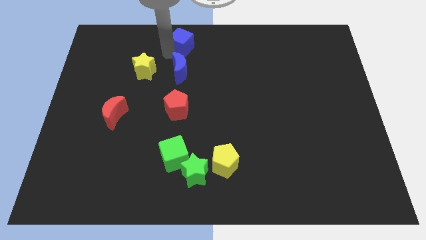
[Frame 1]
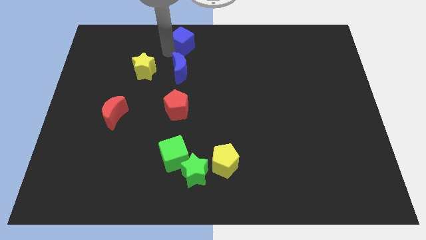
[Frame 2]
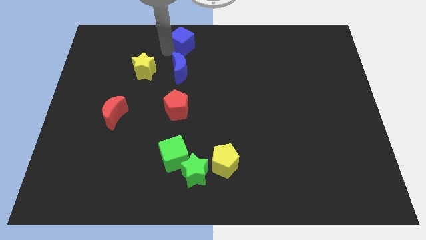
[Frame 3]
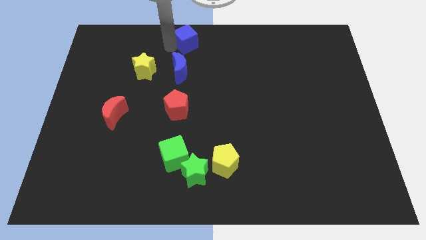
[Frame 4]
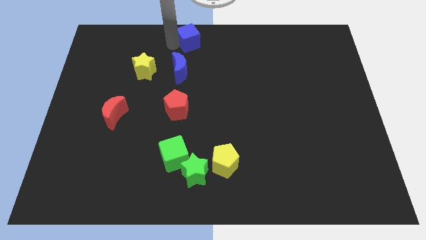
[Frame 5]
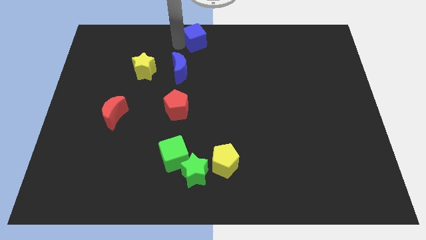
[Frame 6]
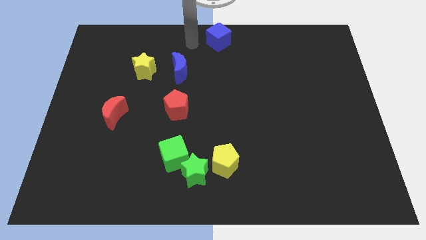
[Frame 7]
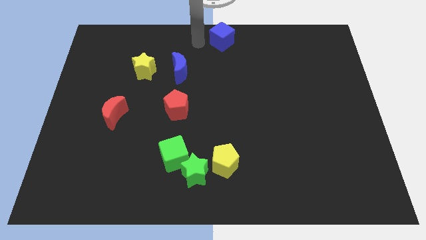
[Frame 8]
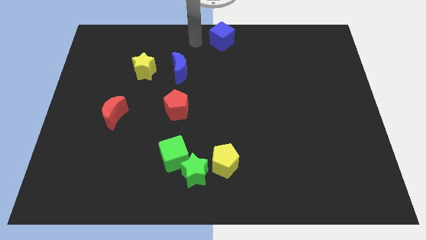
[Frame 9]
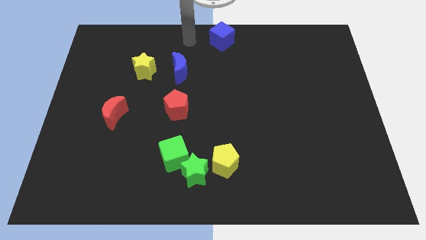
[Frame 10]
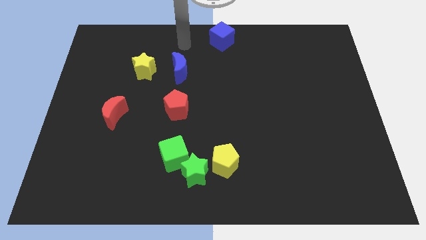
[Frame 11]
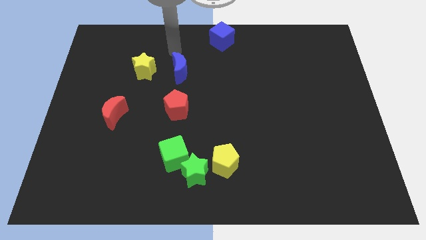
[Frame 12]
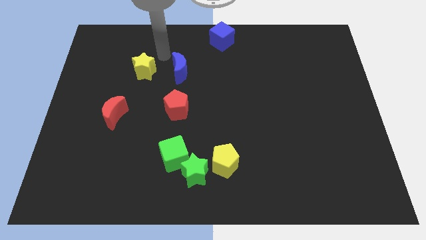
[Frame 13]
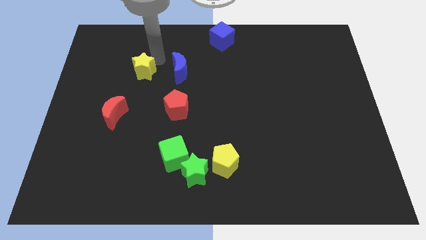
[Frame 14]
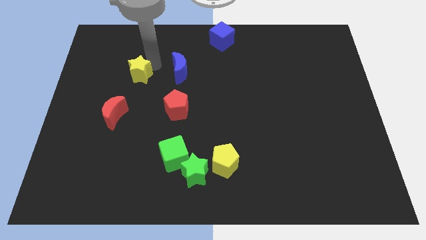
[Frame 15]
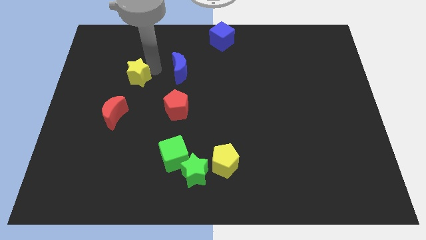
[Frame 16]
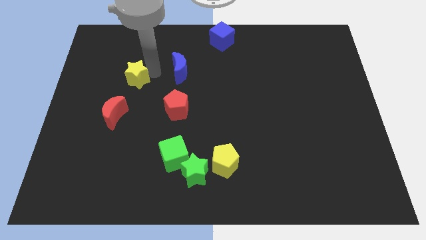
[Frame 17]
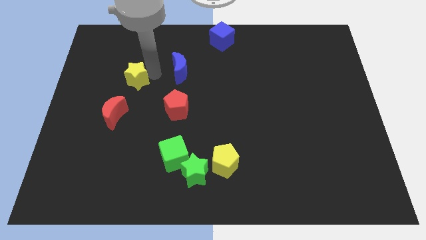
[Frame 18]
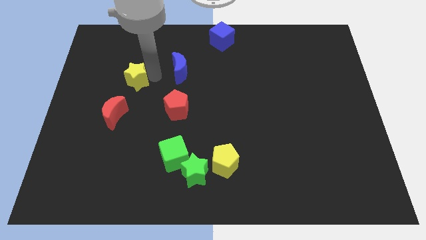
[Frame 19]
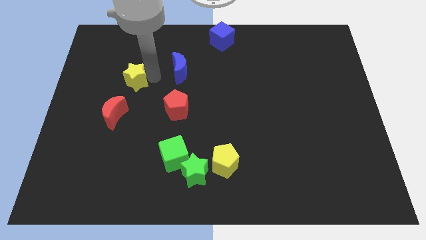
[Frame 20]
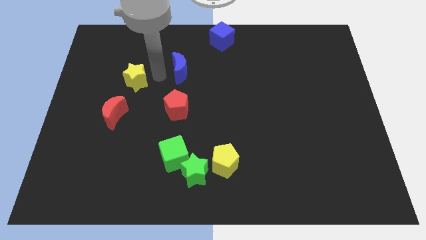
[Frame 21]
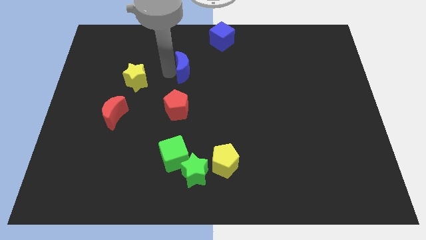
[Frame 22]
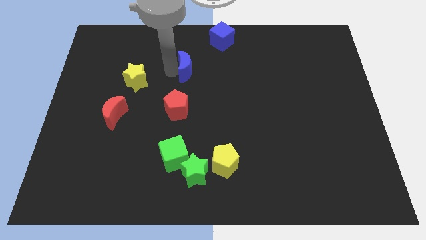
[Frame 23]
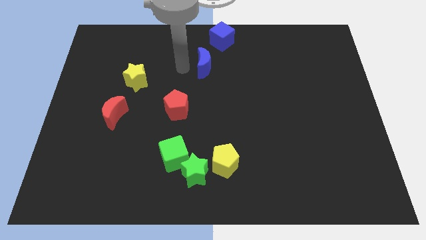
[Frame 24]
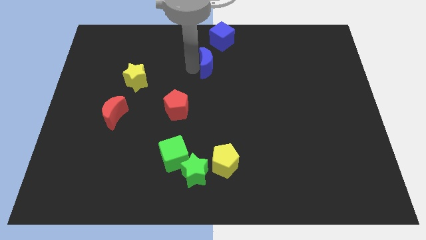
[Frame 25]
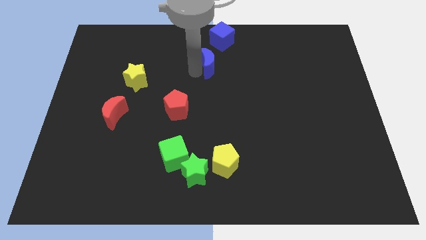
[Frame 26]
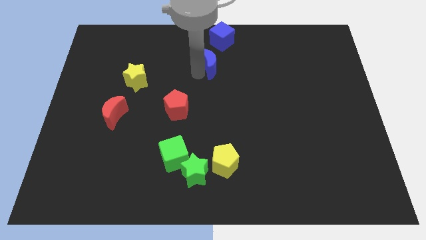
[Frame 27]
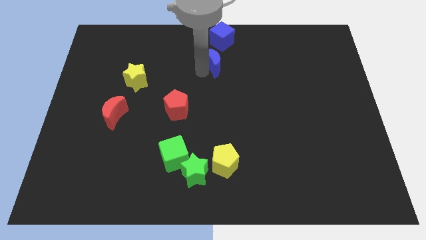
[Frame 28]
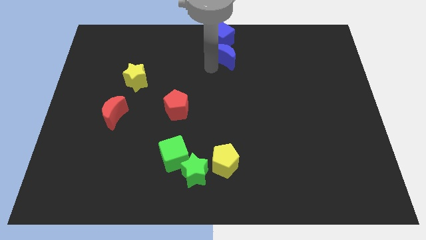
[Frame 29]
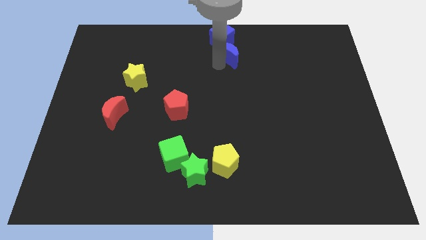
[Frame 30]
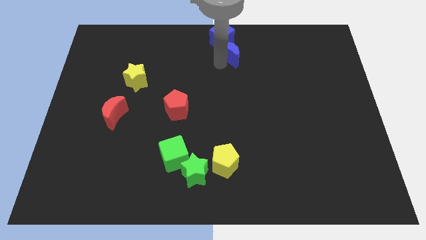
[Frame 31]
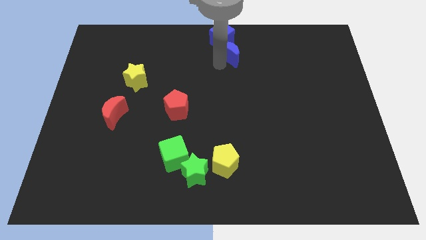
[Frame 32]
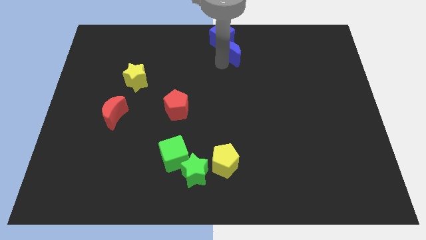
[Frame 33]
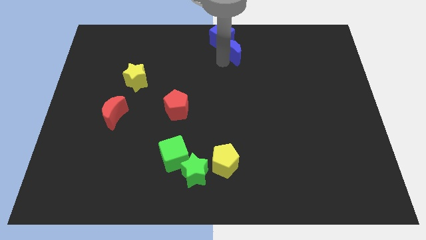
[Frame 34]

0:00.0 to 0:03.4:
move the blue blocks to the top center of the board

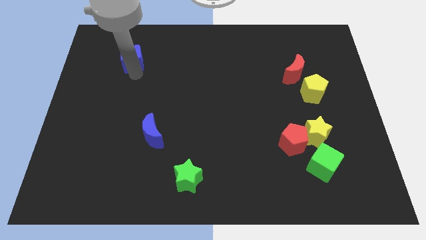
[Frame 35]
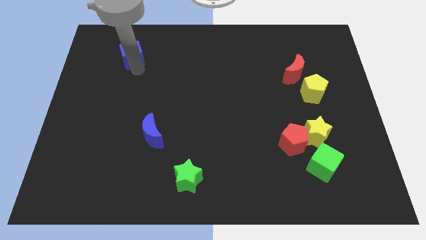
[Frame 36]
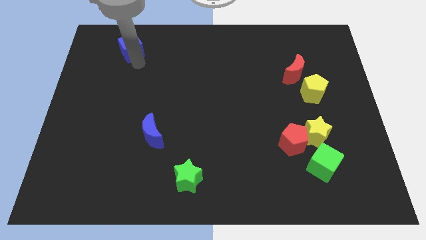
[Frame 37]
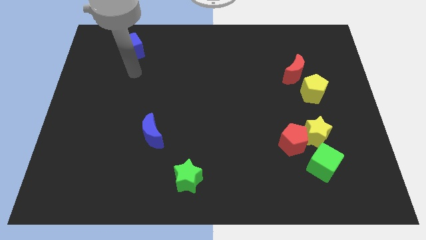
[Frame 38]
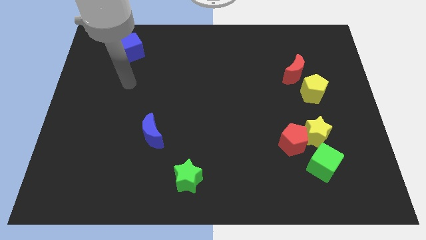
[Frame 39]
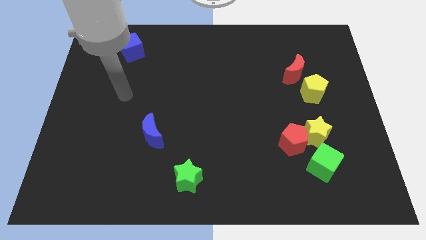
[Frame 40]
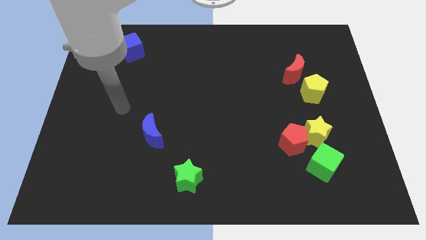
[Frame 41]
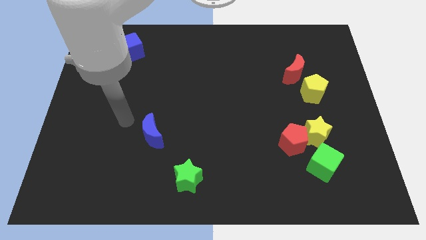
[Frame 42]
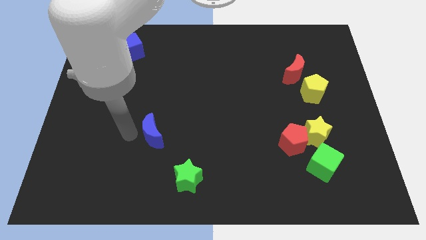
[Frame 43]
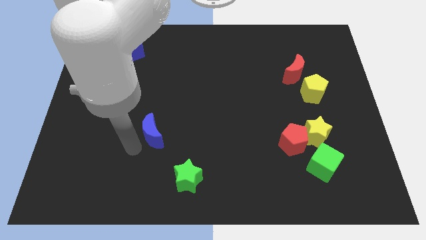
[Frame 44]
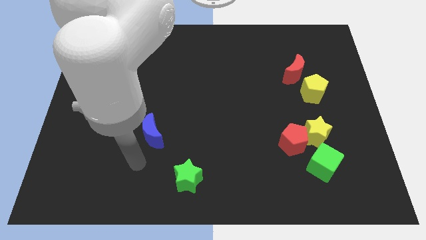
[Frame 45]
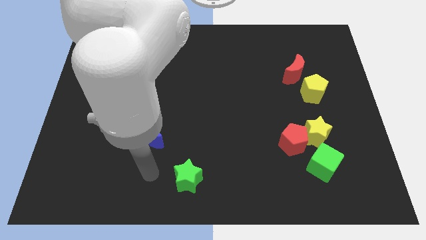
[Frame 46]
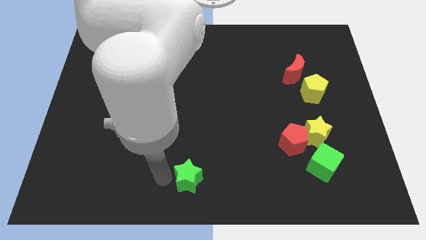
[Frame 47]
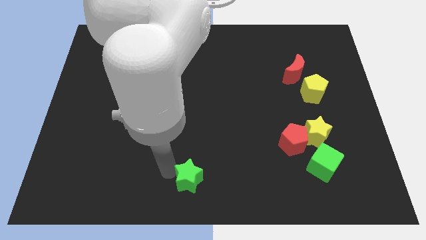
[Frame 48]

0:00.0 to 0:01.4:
point your arm at the left side of the green star

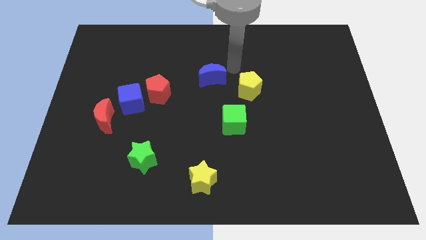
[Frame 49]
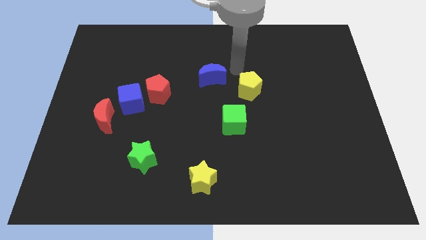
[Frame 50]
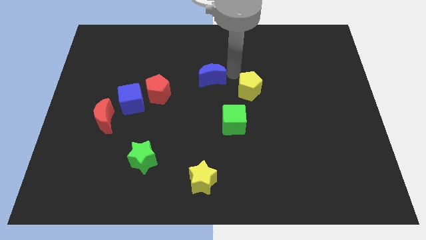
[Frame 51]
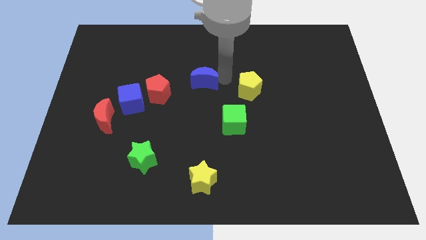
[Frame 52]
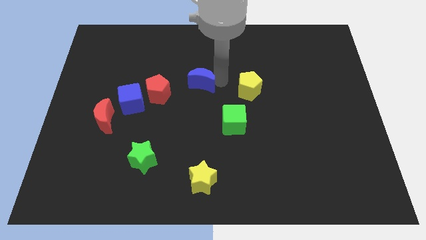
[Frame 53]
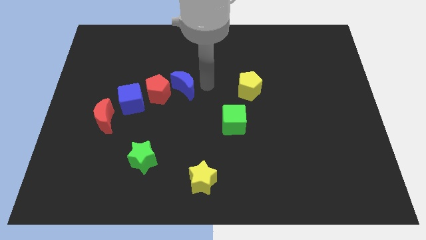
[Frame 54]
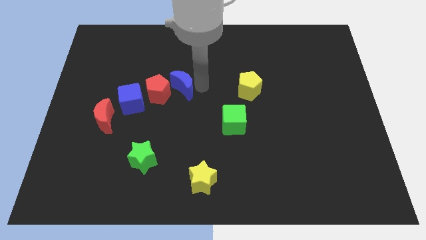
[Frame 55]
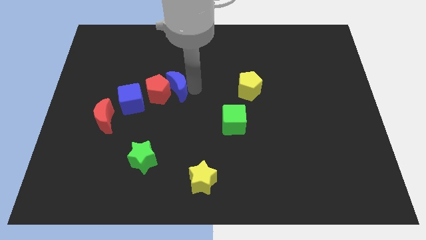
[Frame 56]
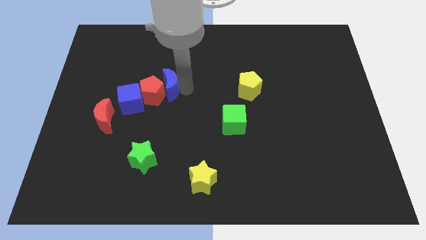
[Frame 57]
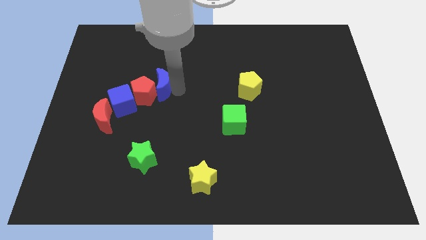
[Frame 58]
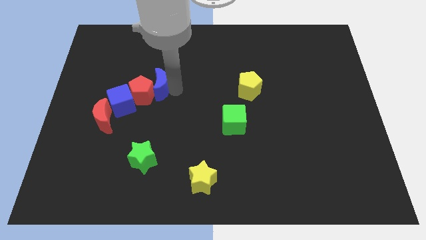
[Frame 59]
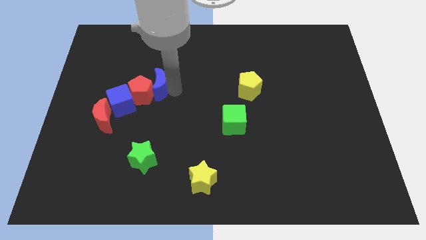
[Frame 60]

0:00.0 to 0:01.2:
push the blue crescent to the right of the red pentagon

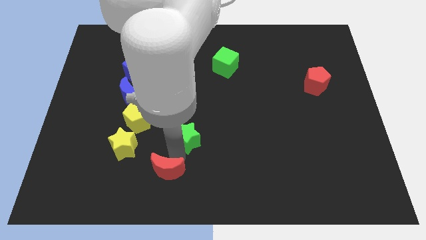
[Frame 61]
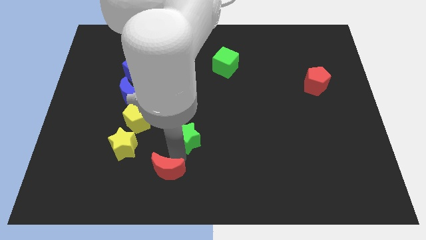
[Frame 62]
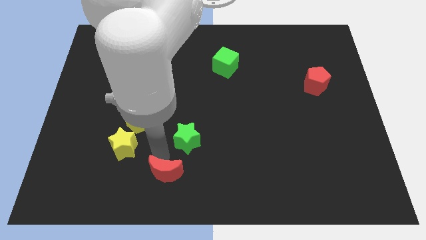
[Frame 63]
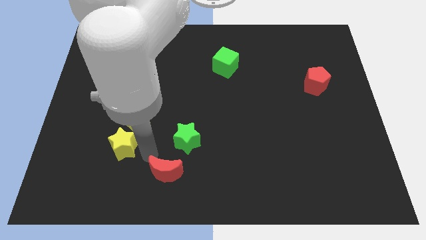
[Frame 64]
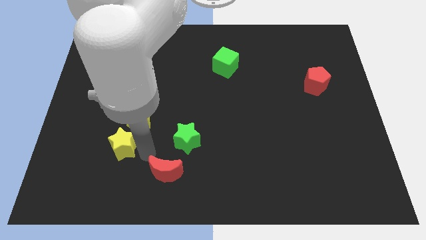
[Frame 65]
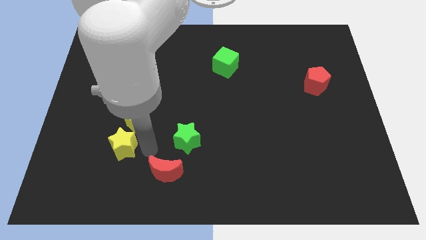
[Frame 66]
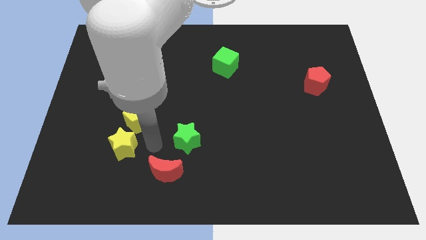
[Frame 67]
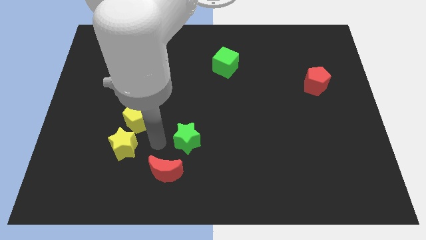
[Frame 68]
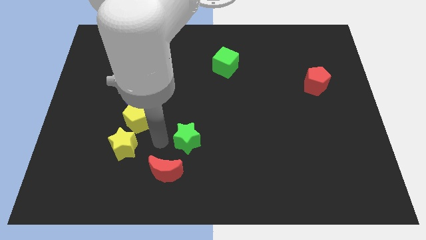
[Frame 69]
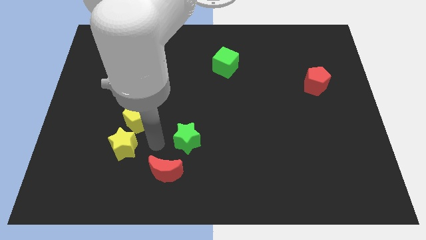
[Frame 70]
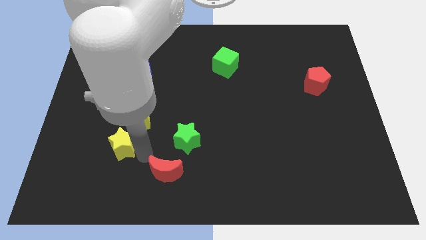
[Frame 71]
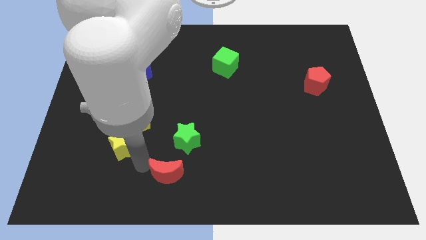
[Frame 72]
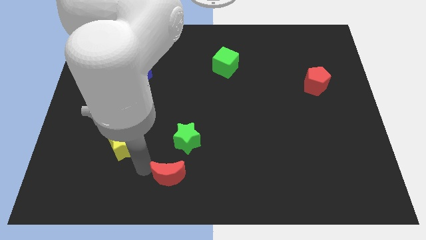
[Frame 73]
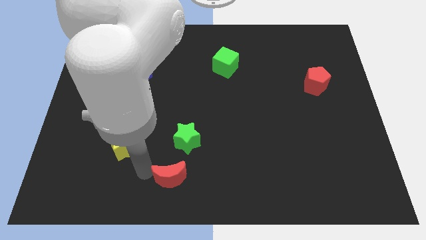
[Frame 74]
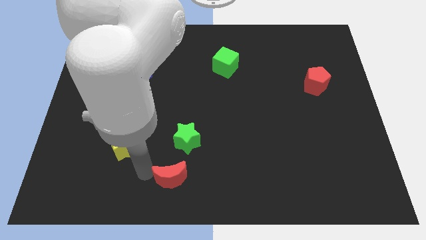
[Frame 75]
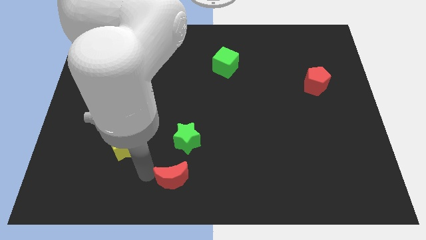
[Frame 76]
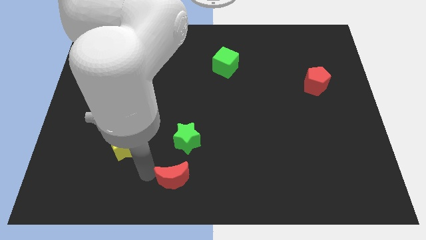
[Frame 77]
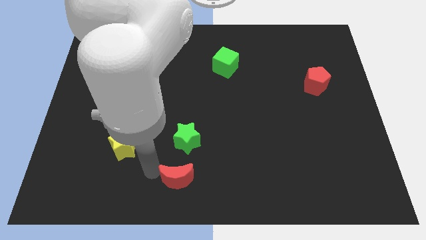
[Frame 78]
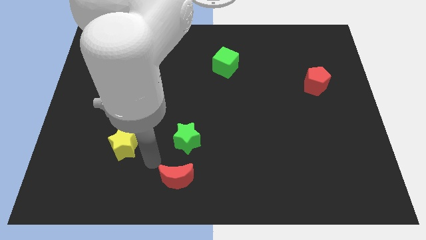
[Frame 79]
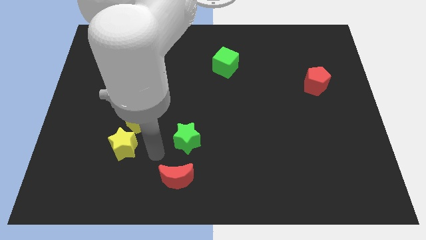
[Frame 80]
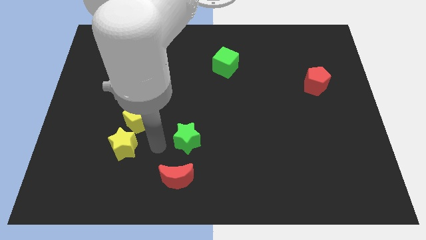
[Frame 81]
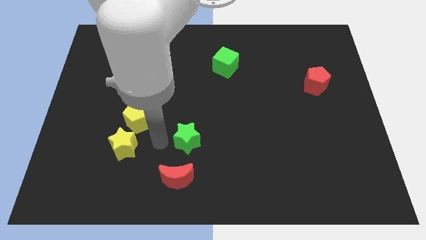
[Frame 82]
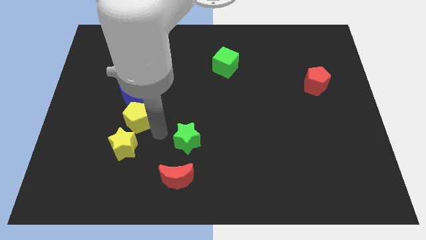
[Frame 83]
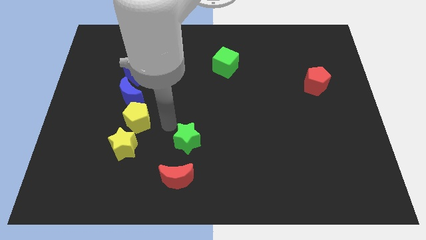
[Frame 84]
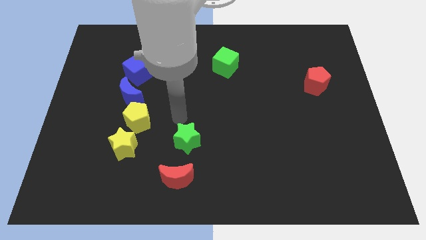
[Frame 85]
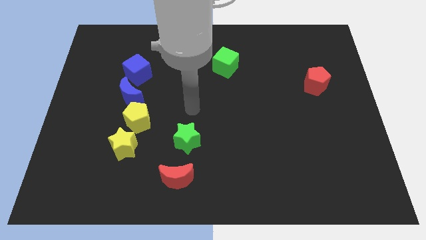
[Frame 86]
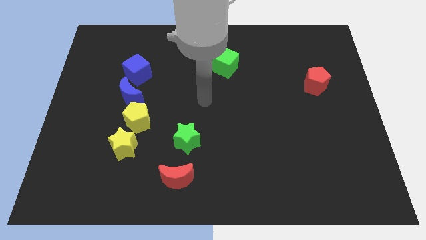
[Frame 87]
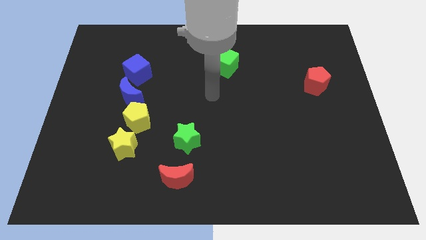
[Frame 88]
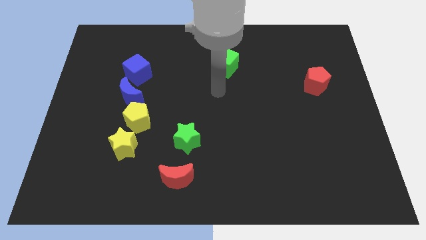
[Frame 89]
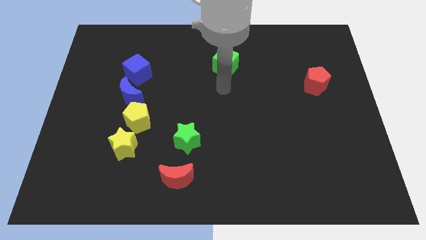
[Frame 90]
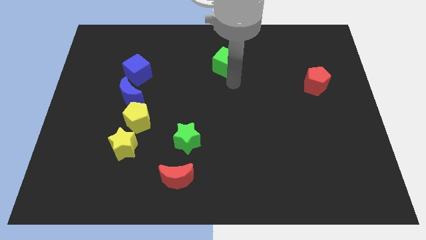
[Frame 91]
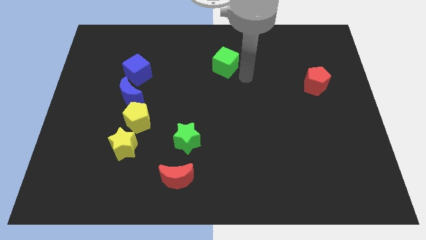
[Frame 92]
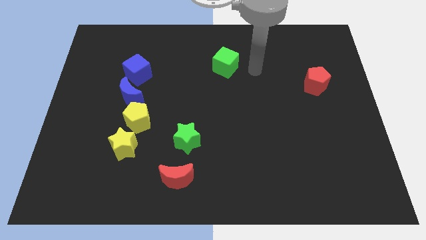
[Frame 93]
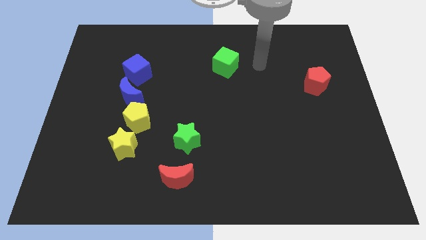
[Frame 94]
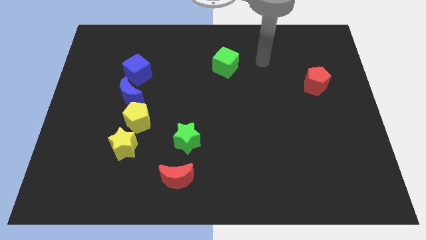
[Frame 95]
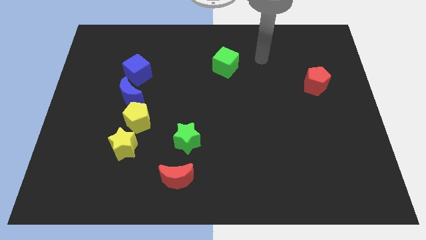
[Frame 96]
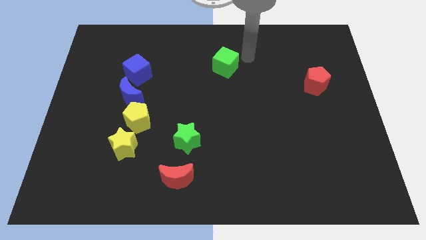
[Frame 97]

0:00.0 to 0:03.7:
move your arm close to the green cube
